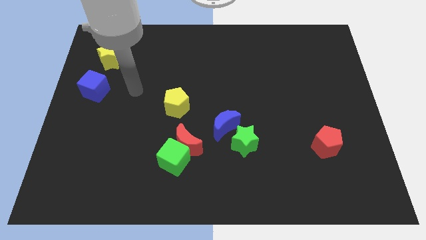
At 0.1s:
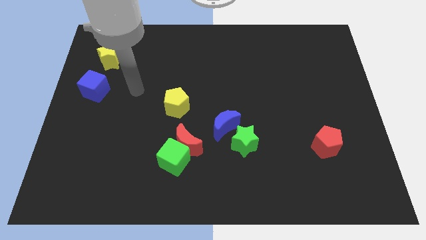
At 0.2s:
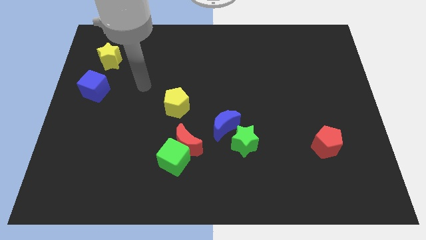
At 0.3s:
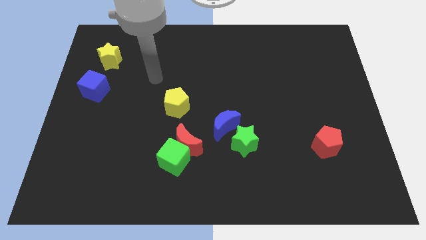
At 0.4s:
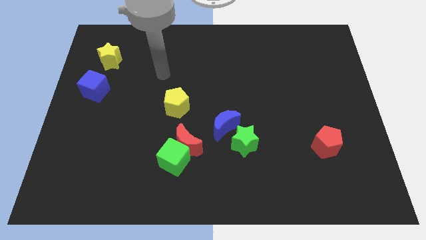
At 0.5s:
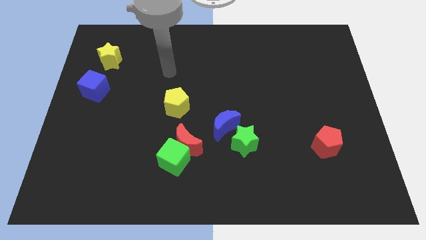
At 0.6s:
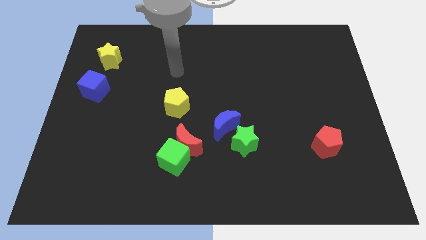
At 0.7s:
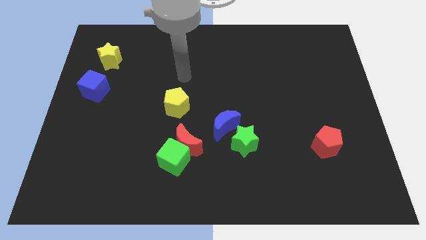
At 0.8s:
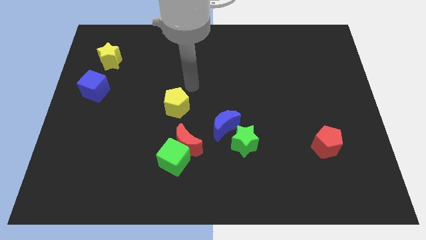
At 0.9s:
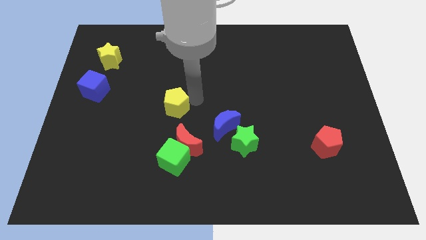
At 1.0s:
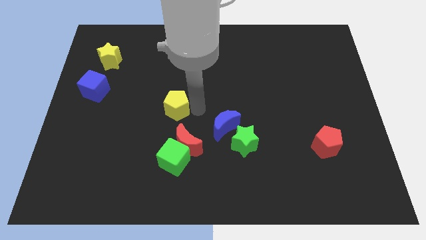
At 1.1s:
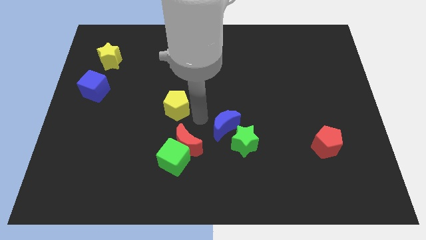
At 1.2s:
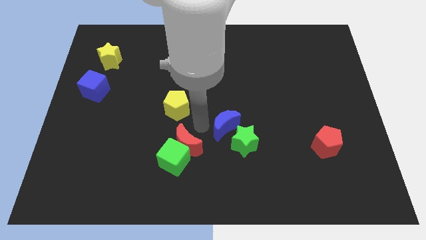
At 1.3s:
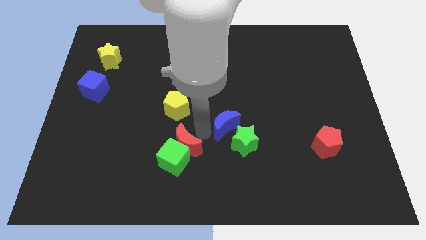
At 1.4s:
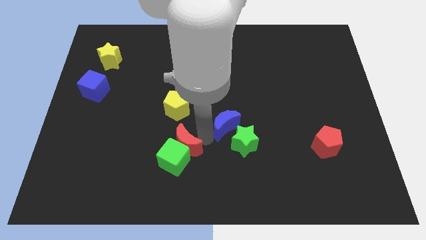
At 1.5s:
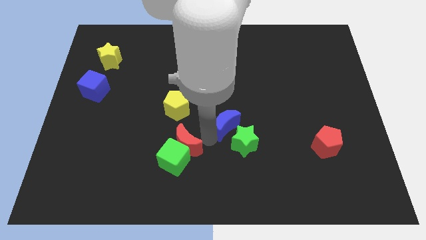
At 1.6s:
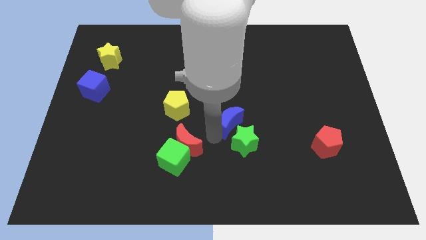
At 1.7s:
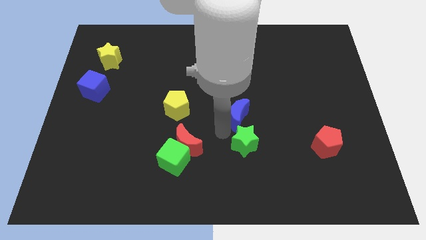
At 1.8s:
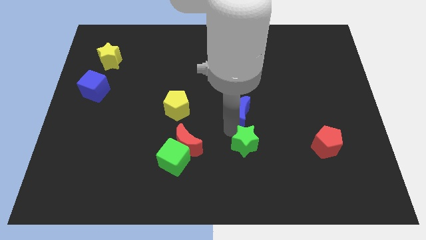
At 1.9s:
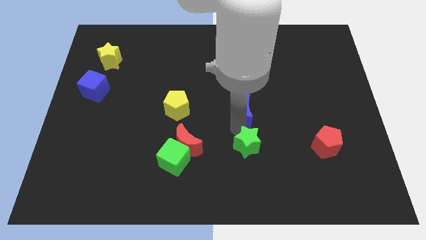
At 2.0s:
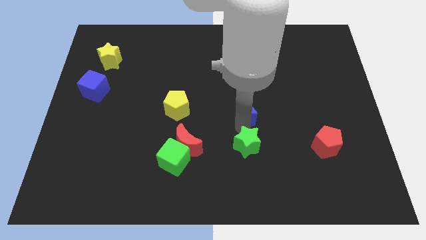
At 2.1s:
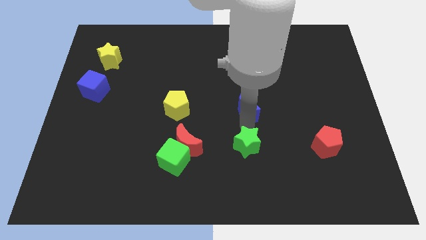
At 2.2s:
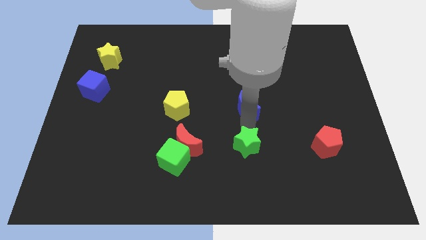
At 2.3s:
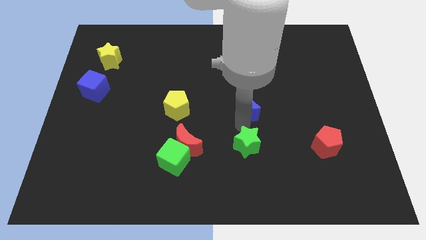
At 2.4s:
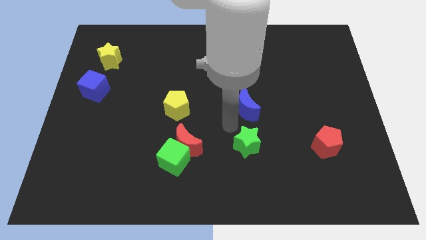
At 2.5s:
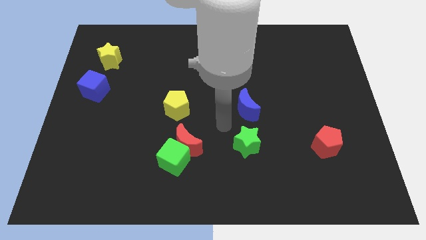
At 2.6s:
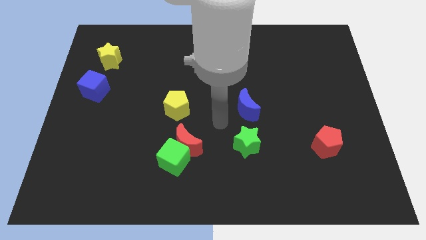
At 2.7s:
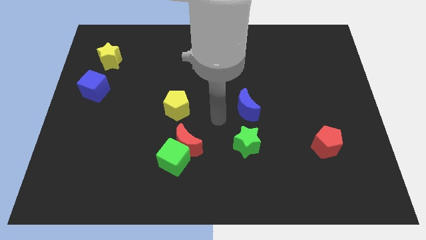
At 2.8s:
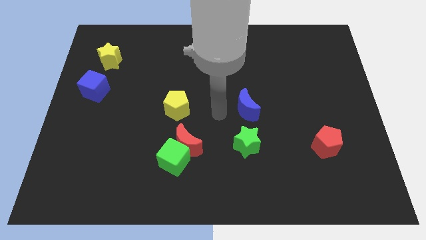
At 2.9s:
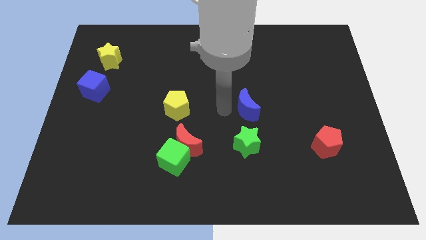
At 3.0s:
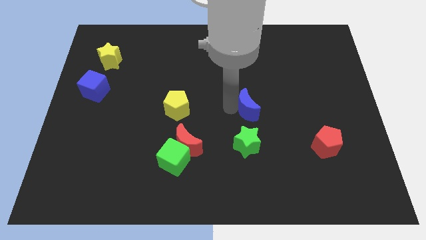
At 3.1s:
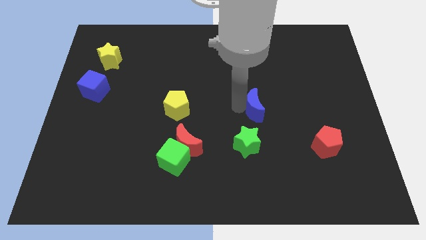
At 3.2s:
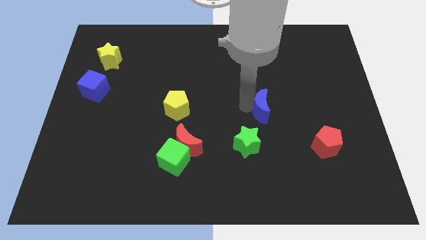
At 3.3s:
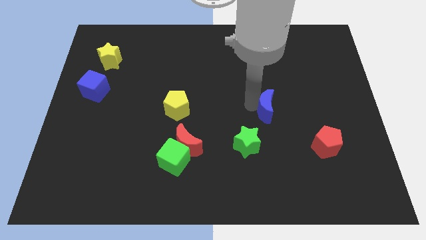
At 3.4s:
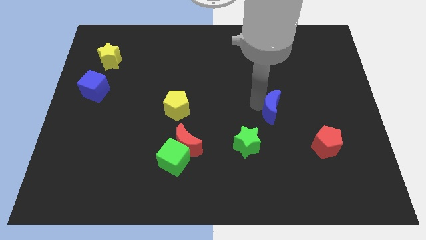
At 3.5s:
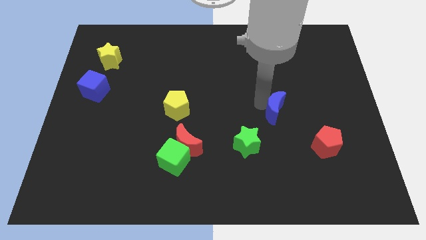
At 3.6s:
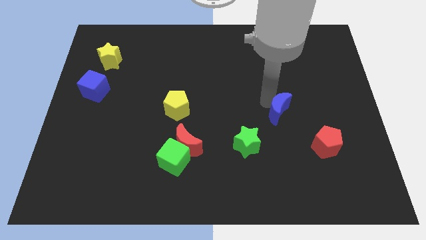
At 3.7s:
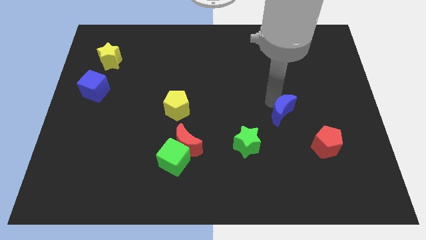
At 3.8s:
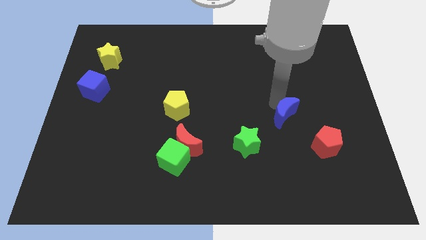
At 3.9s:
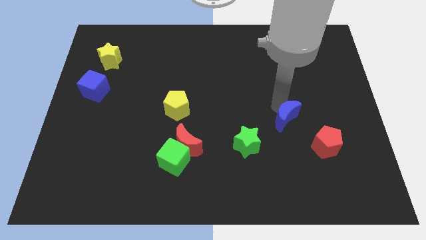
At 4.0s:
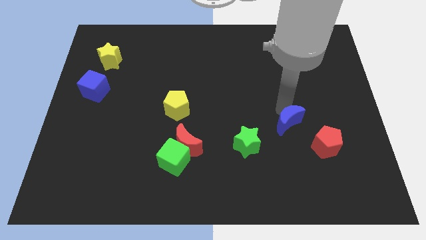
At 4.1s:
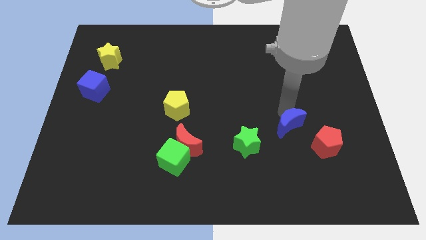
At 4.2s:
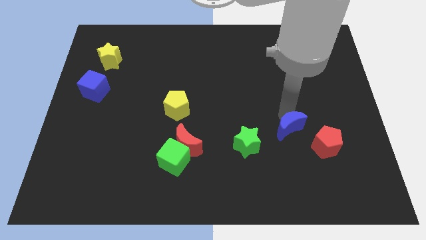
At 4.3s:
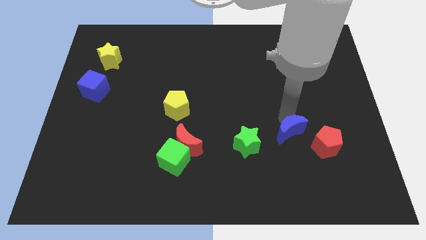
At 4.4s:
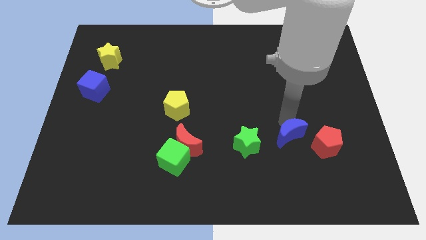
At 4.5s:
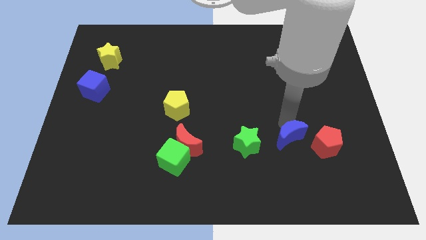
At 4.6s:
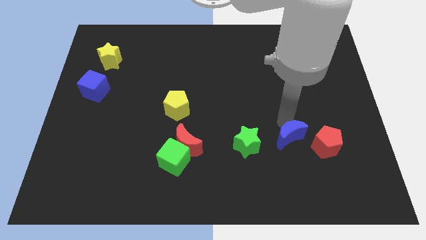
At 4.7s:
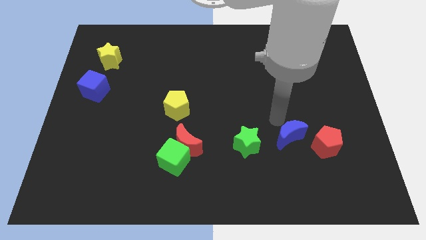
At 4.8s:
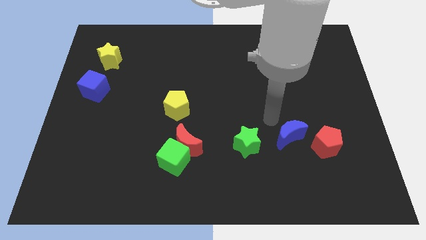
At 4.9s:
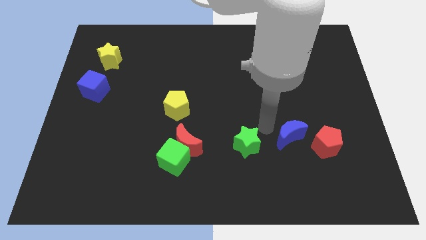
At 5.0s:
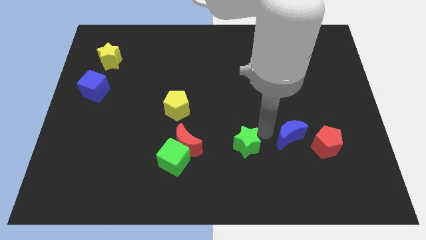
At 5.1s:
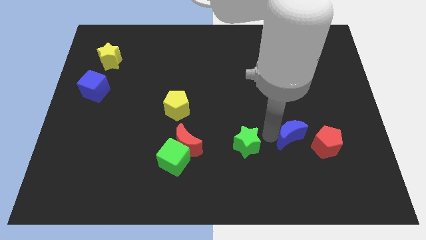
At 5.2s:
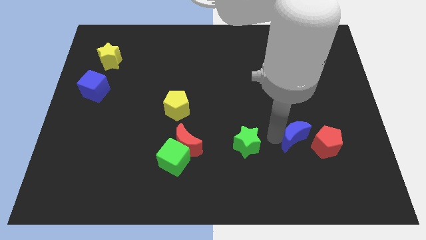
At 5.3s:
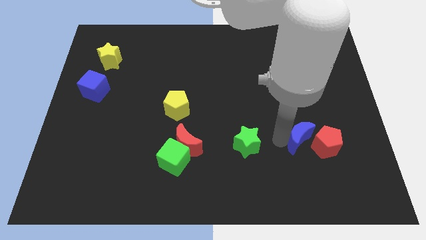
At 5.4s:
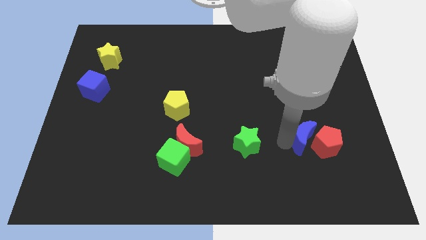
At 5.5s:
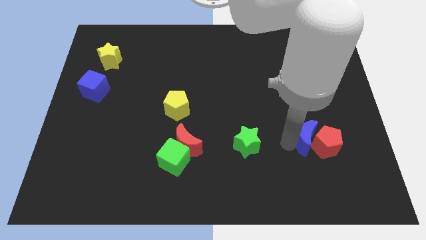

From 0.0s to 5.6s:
put the blue moon close to the red pentagon

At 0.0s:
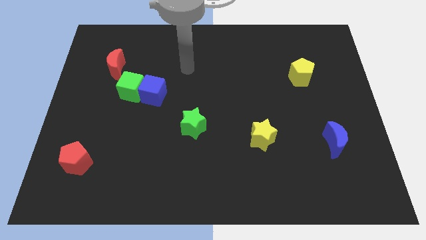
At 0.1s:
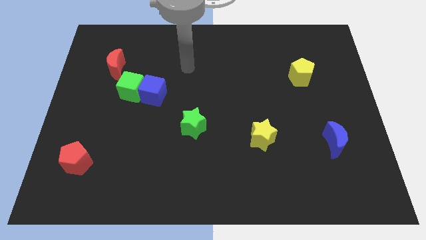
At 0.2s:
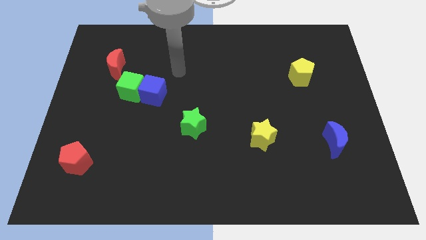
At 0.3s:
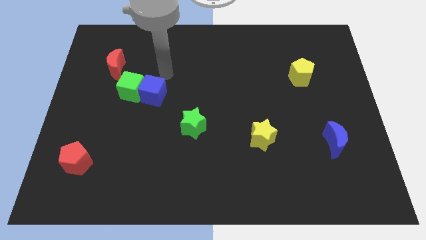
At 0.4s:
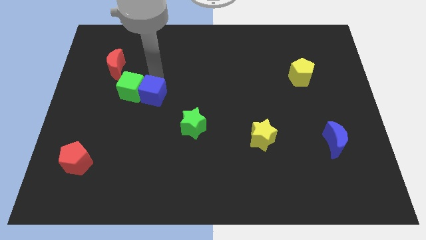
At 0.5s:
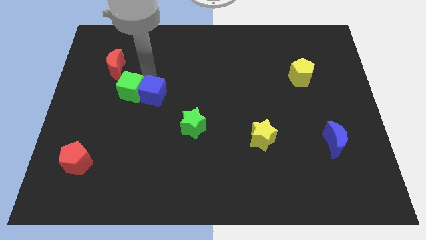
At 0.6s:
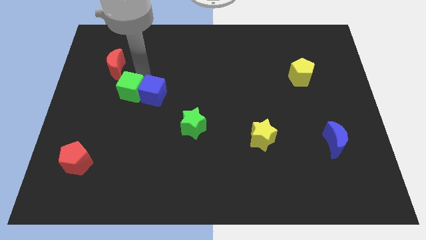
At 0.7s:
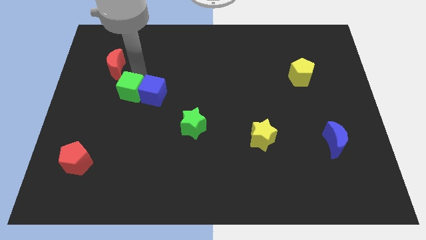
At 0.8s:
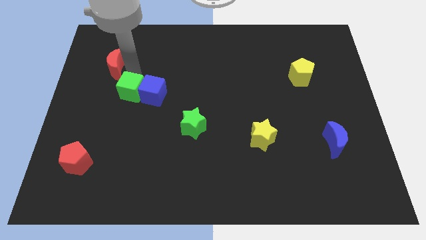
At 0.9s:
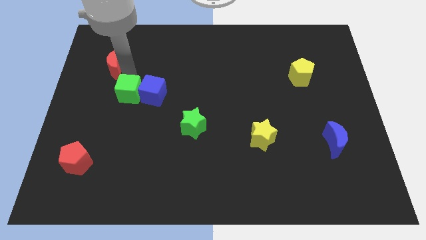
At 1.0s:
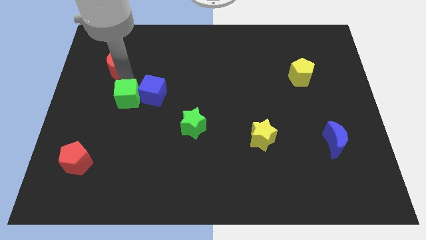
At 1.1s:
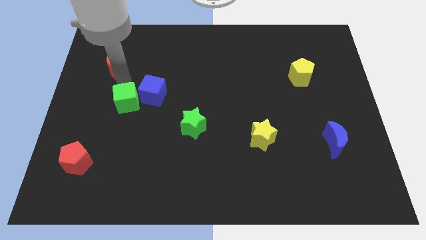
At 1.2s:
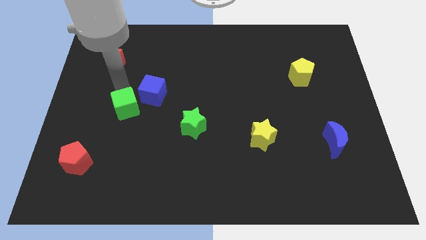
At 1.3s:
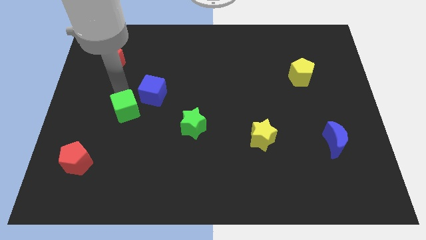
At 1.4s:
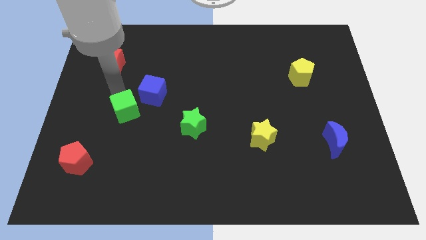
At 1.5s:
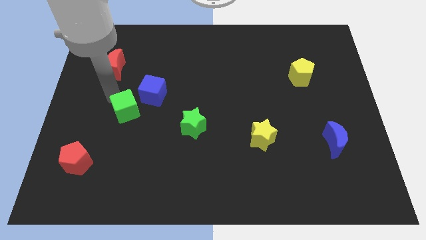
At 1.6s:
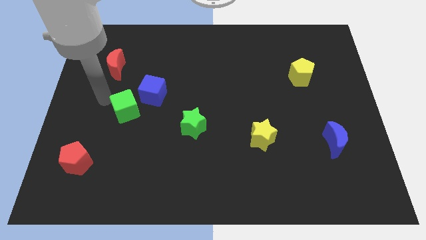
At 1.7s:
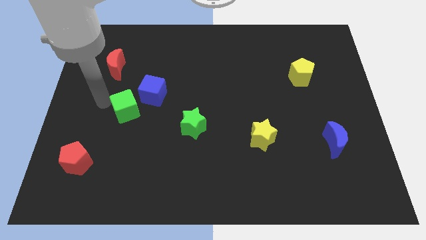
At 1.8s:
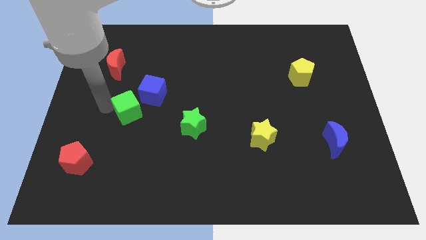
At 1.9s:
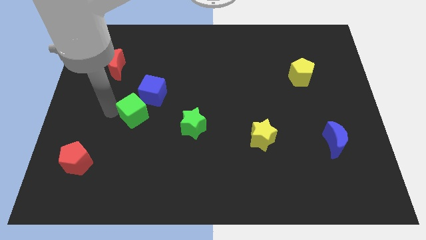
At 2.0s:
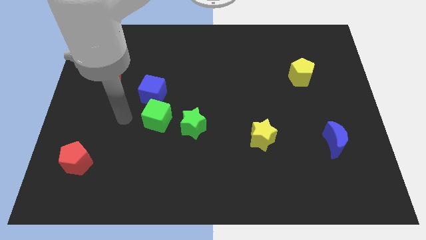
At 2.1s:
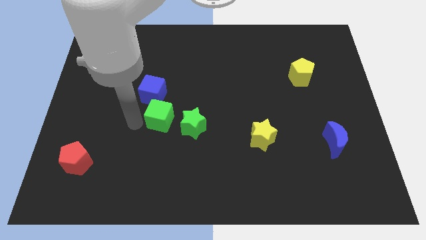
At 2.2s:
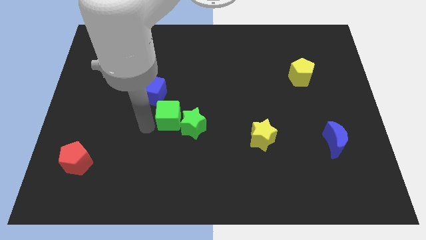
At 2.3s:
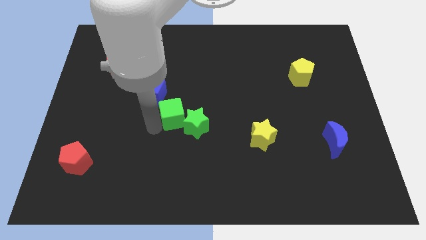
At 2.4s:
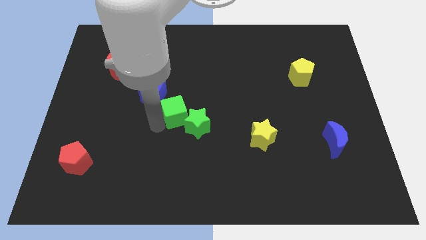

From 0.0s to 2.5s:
put the green cube towards the green star

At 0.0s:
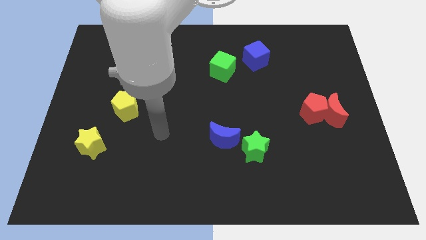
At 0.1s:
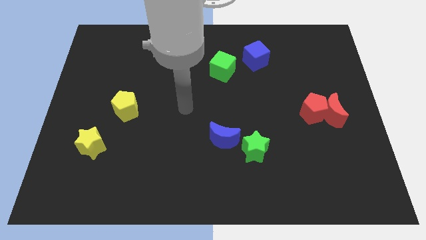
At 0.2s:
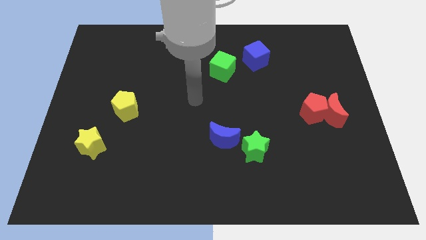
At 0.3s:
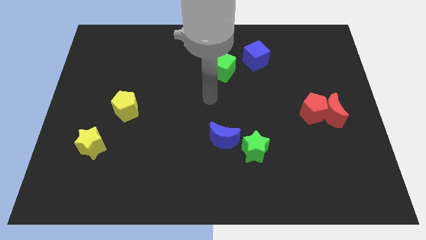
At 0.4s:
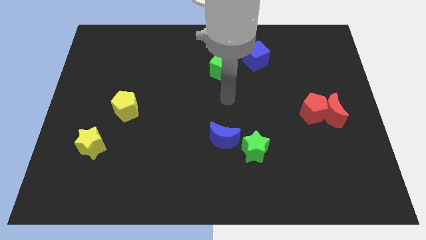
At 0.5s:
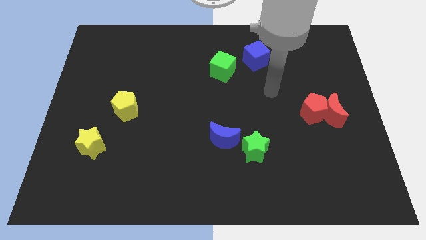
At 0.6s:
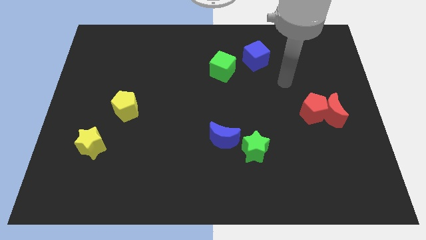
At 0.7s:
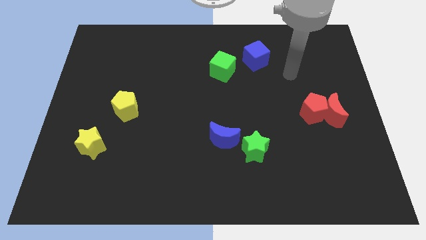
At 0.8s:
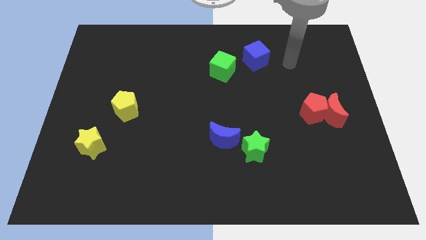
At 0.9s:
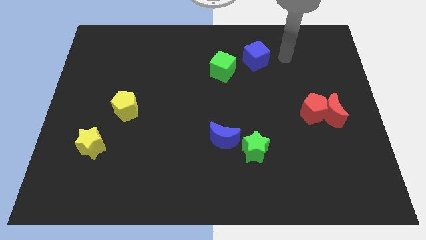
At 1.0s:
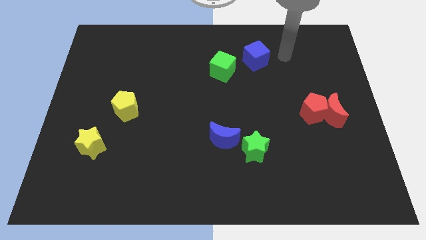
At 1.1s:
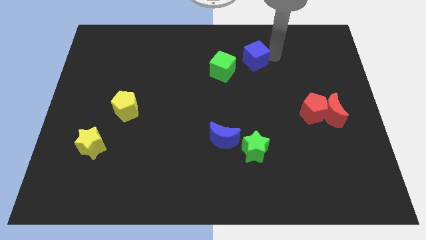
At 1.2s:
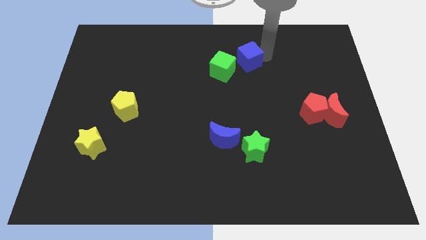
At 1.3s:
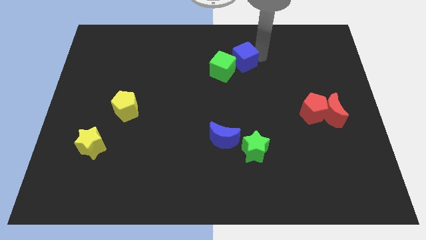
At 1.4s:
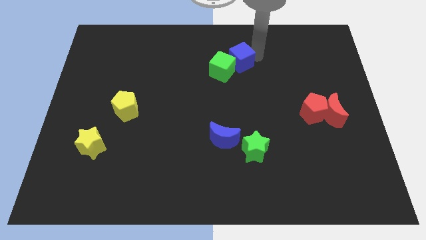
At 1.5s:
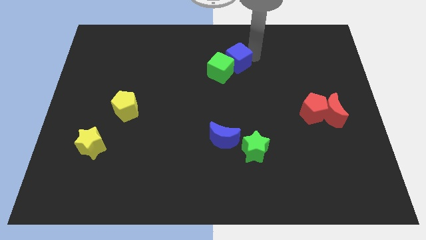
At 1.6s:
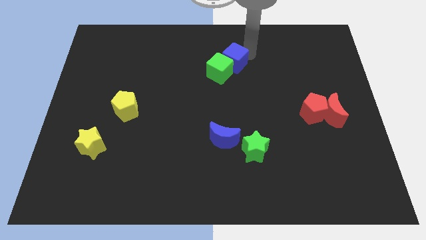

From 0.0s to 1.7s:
move the blue cube towards the green cube
